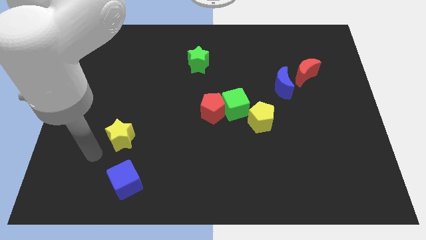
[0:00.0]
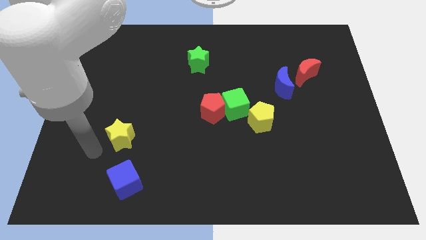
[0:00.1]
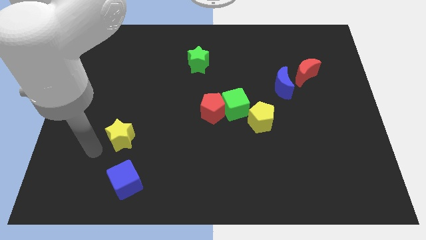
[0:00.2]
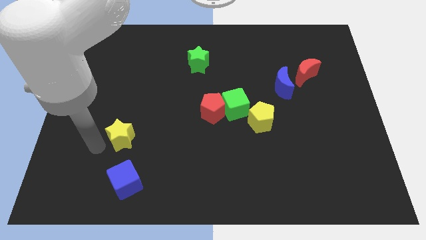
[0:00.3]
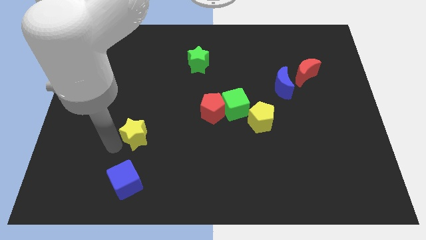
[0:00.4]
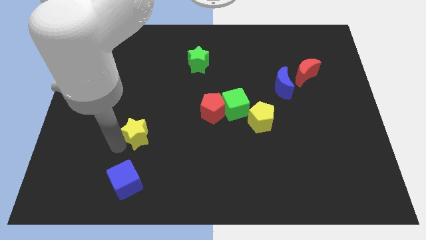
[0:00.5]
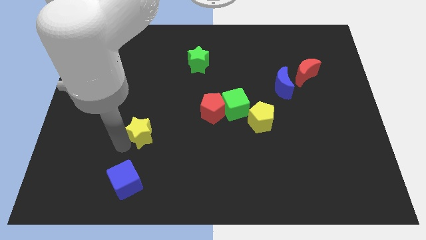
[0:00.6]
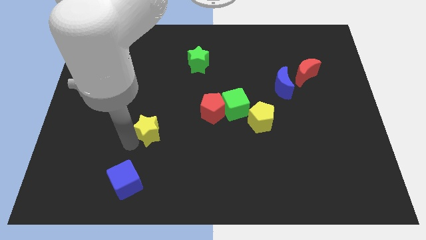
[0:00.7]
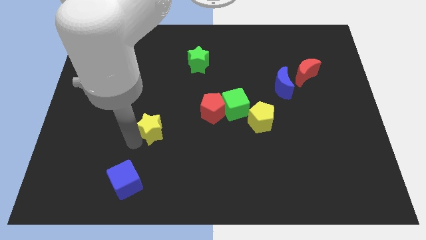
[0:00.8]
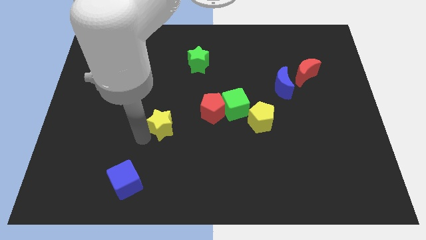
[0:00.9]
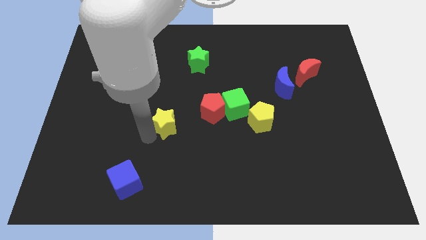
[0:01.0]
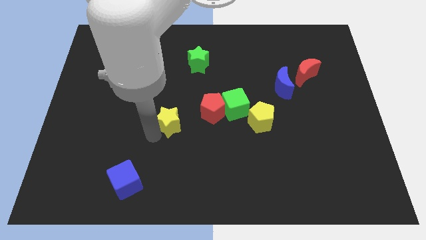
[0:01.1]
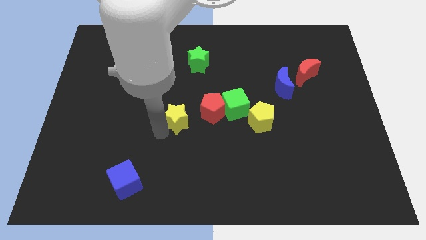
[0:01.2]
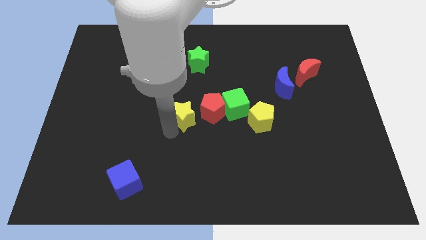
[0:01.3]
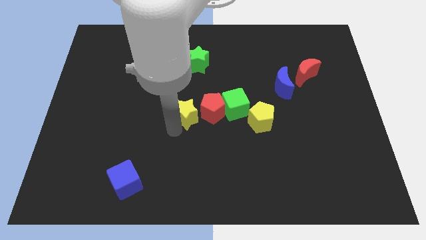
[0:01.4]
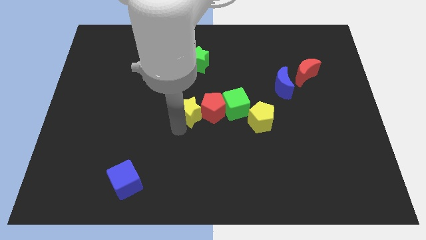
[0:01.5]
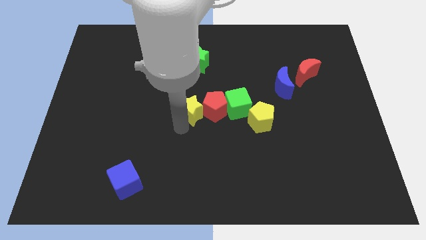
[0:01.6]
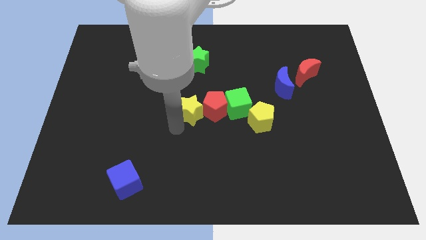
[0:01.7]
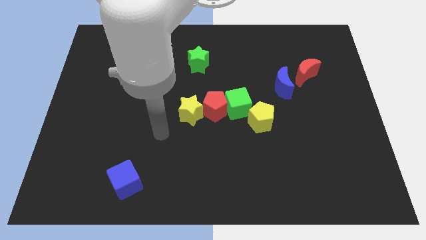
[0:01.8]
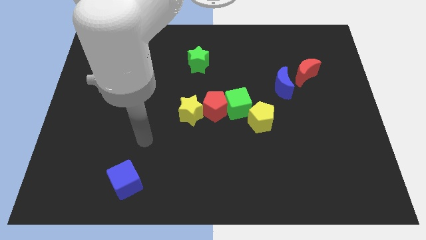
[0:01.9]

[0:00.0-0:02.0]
push the yellow pentagon into the red pentagon

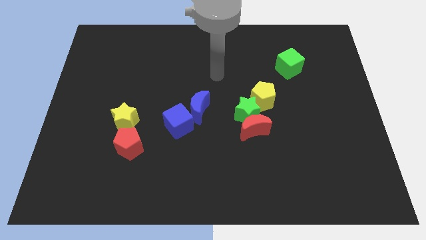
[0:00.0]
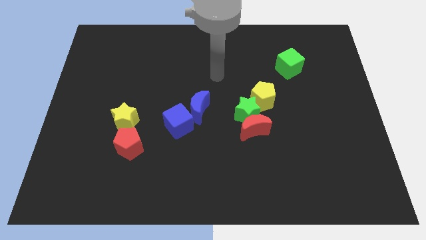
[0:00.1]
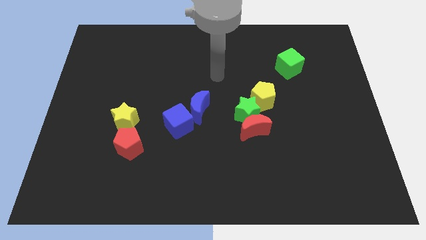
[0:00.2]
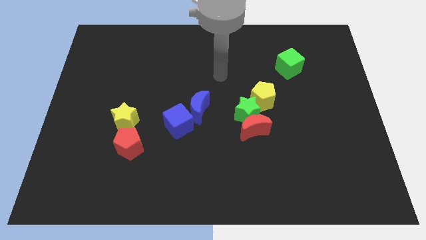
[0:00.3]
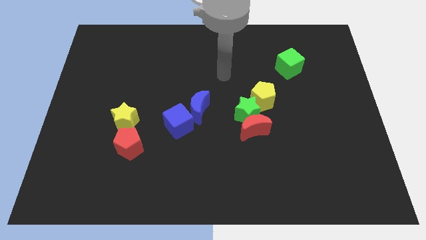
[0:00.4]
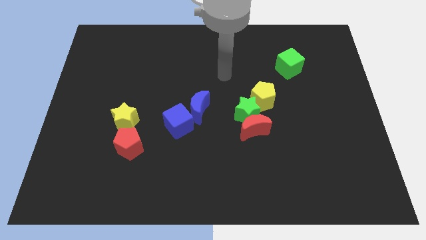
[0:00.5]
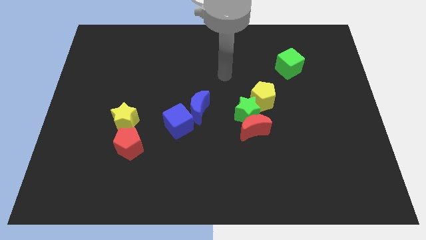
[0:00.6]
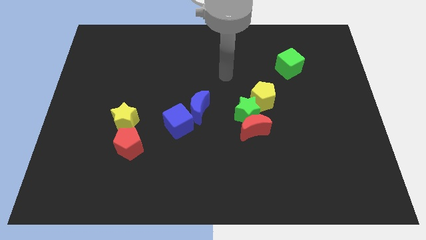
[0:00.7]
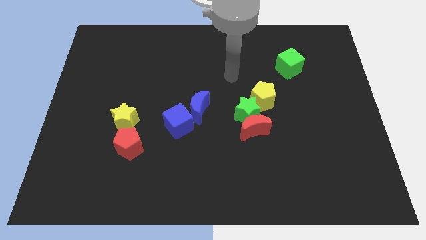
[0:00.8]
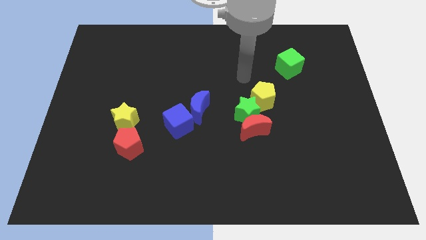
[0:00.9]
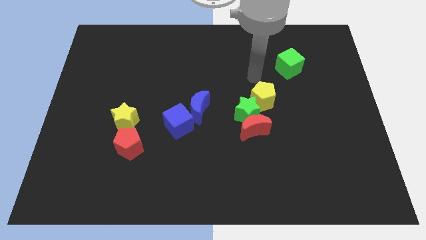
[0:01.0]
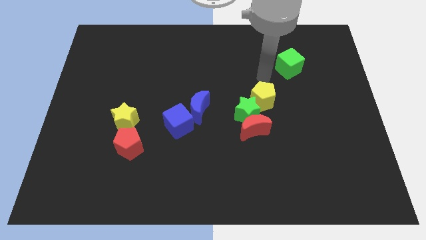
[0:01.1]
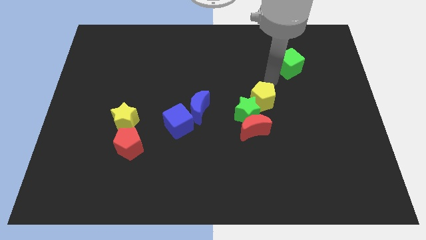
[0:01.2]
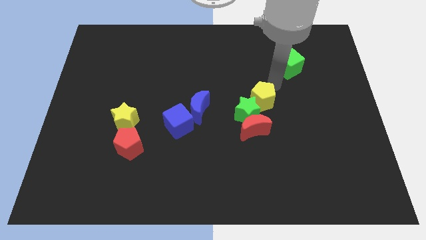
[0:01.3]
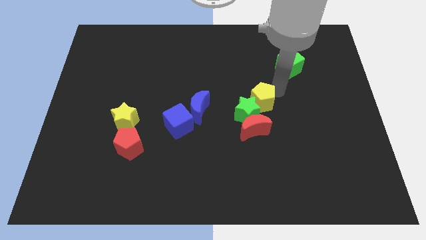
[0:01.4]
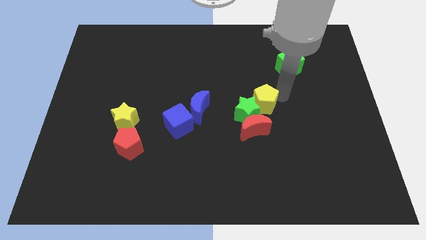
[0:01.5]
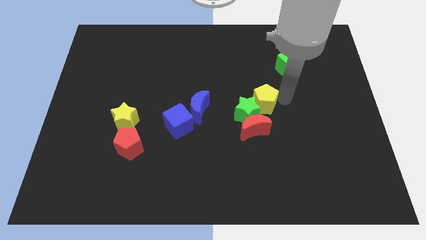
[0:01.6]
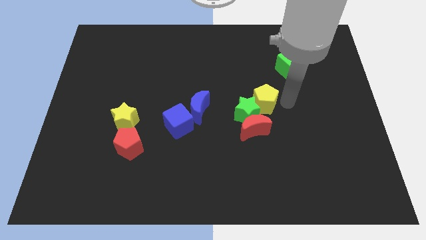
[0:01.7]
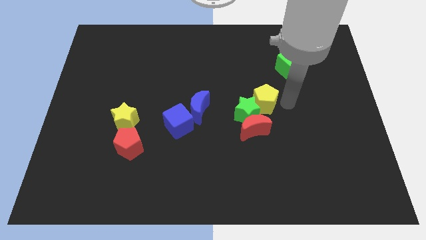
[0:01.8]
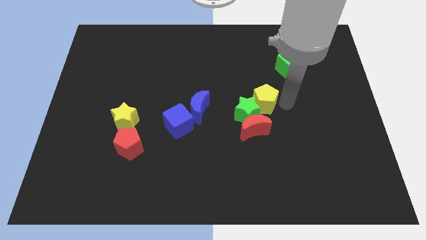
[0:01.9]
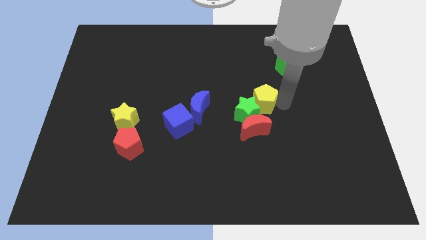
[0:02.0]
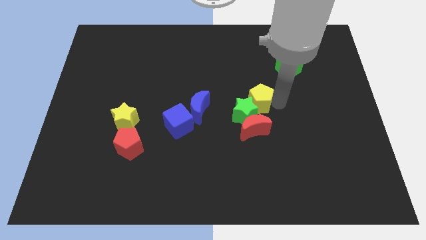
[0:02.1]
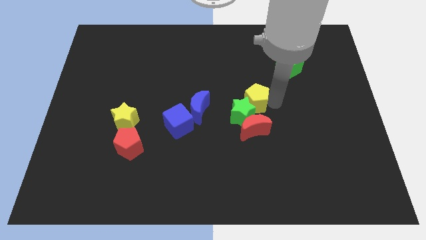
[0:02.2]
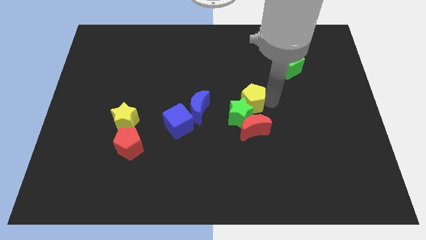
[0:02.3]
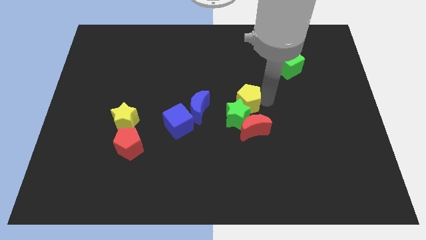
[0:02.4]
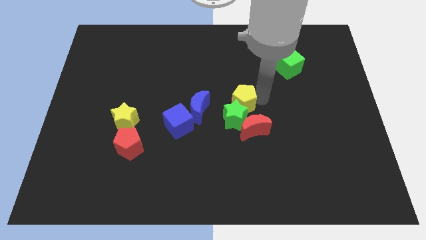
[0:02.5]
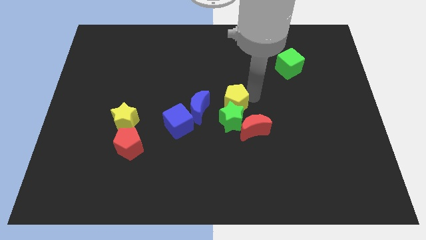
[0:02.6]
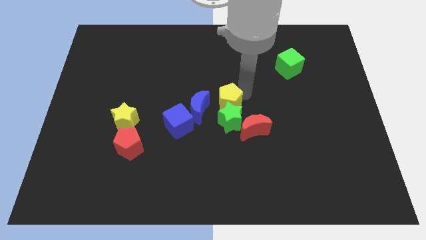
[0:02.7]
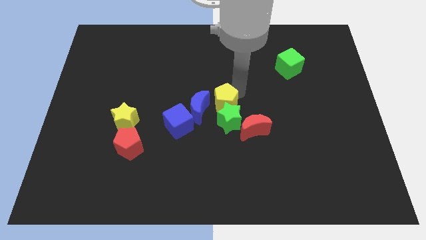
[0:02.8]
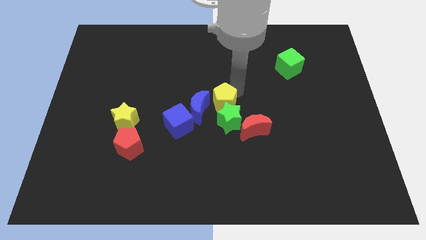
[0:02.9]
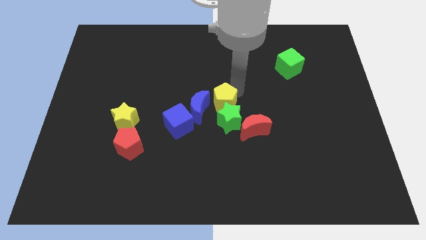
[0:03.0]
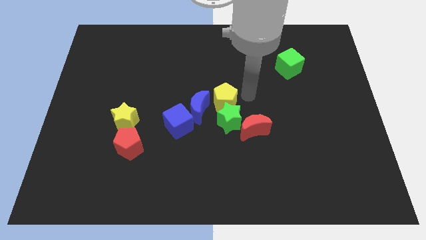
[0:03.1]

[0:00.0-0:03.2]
move the yellow pentagon along with green star to the right of the blue crescent

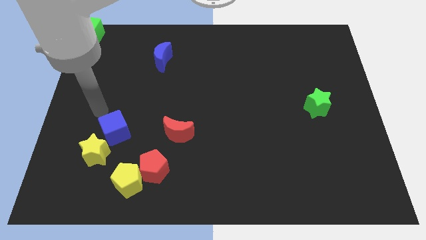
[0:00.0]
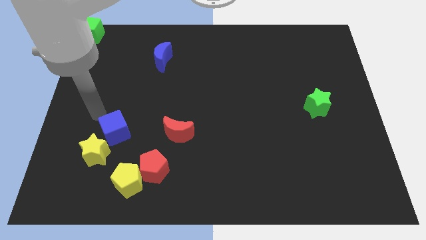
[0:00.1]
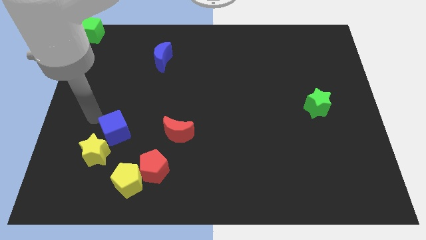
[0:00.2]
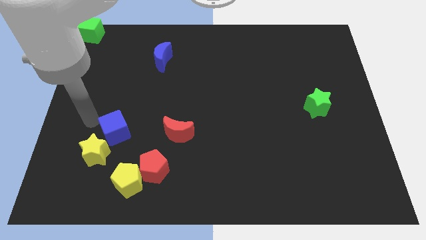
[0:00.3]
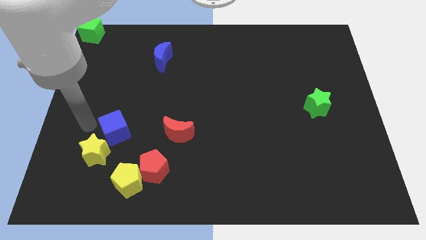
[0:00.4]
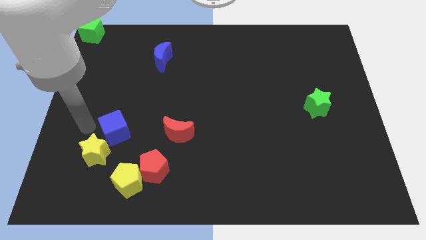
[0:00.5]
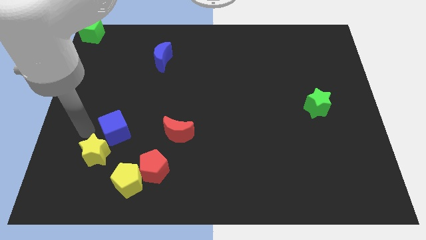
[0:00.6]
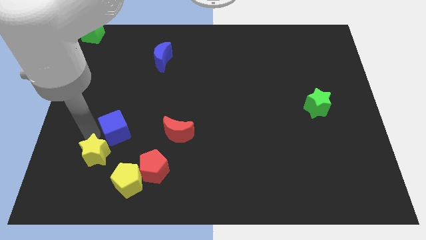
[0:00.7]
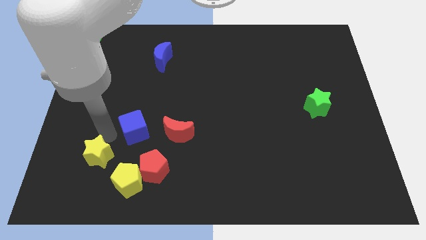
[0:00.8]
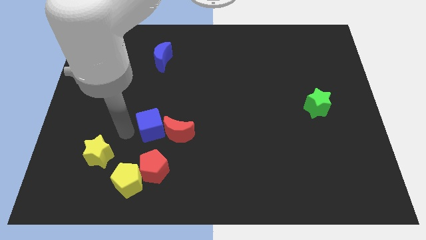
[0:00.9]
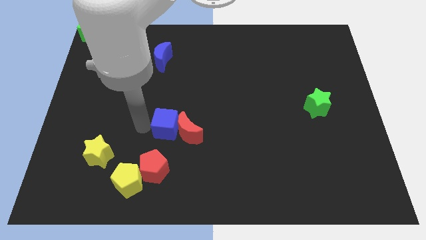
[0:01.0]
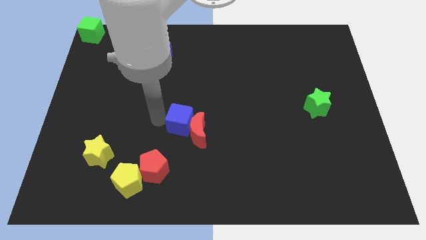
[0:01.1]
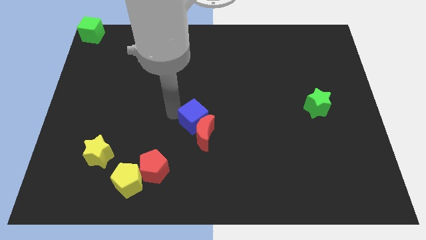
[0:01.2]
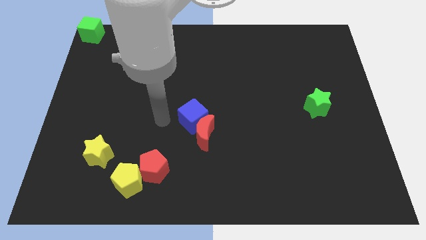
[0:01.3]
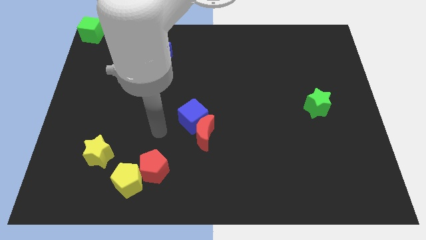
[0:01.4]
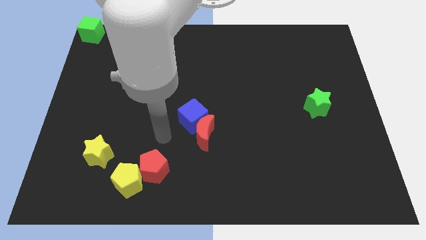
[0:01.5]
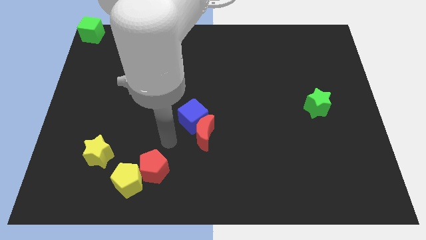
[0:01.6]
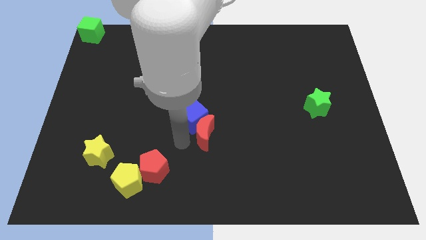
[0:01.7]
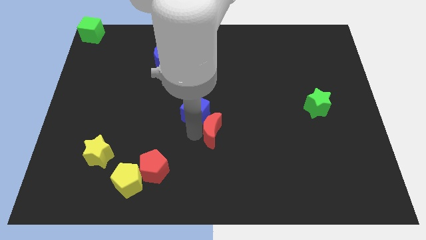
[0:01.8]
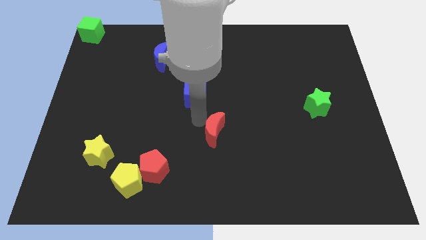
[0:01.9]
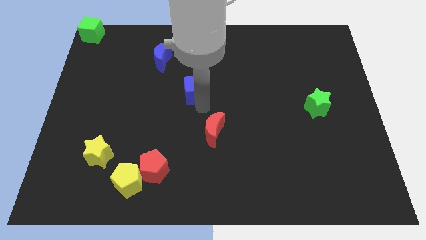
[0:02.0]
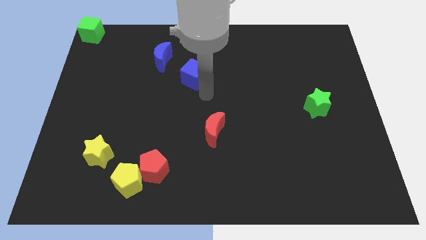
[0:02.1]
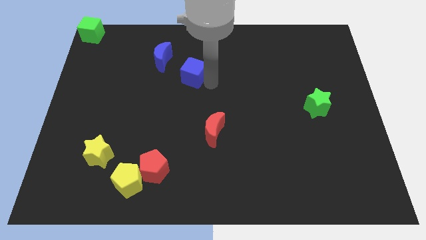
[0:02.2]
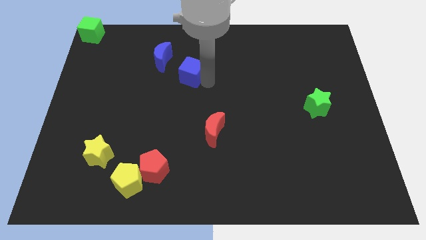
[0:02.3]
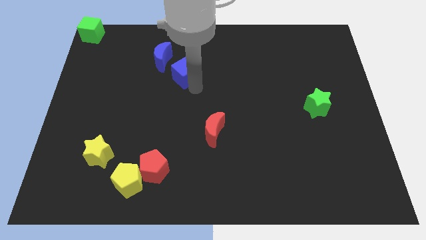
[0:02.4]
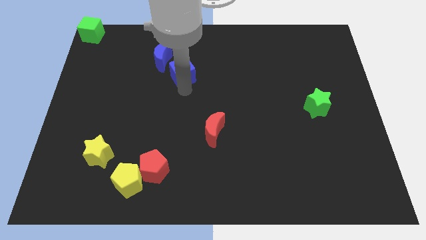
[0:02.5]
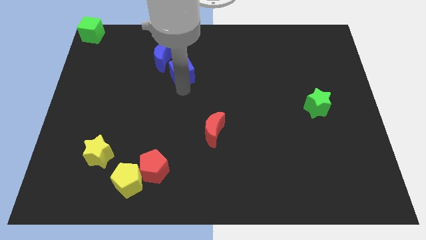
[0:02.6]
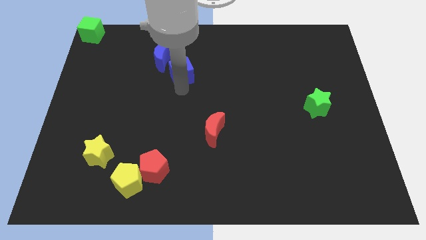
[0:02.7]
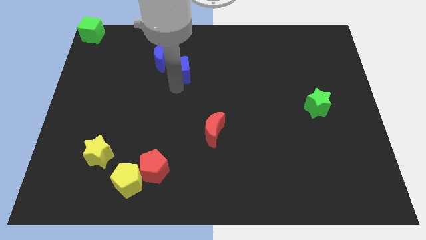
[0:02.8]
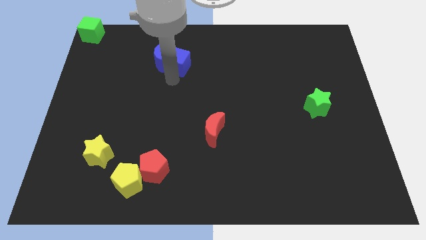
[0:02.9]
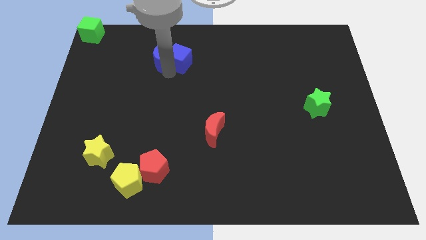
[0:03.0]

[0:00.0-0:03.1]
push the blue cube to the right of the blue crescent

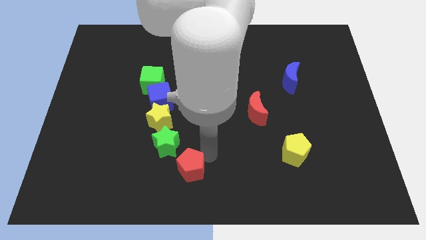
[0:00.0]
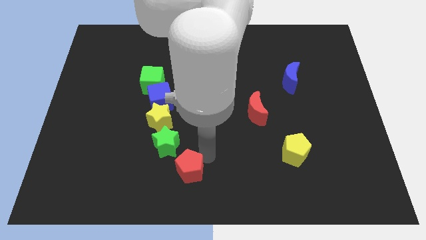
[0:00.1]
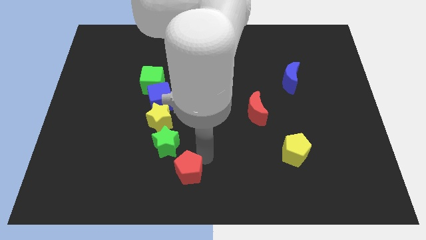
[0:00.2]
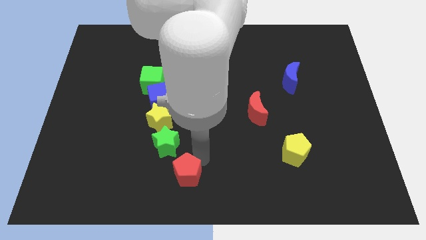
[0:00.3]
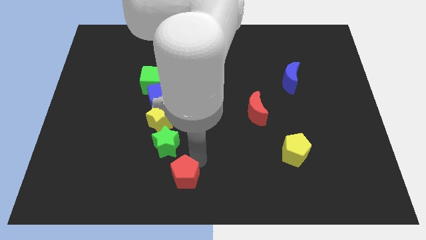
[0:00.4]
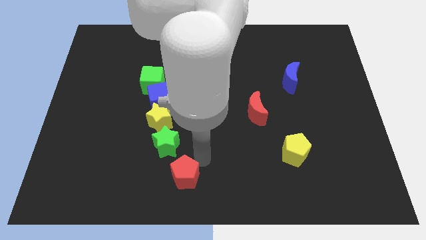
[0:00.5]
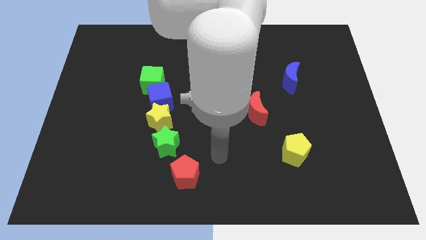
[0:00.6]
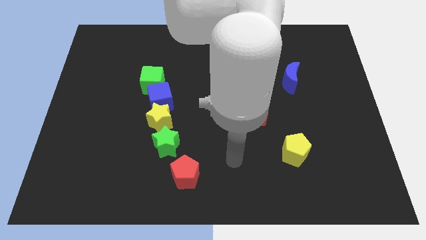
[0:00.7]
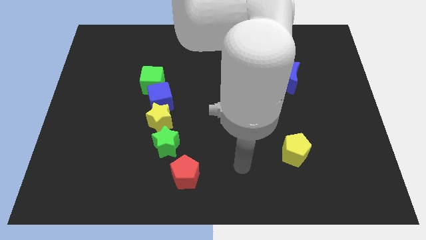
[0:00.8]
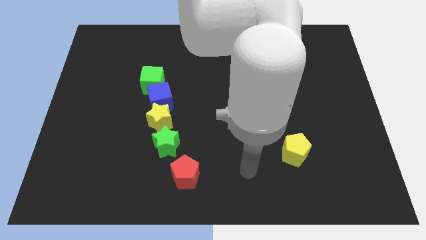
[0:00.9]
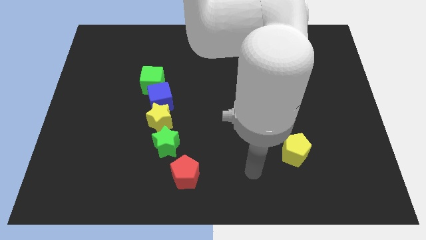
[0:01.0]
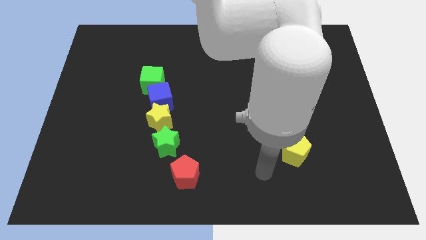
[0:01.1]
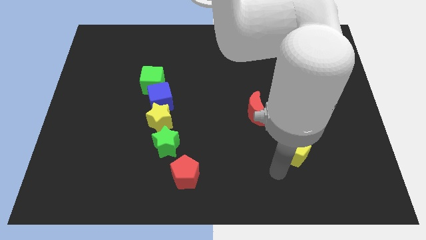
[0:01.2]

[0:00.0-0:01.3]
place the red pentagon diagonal to the green star
